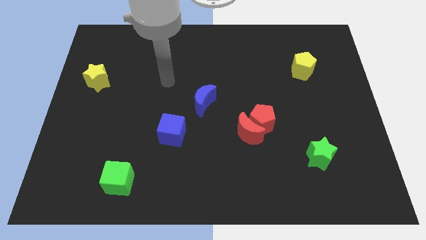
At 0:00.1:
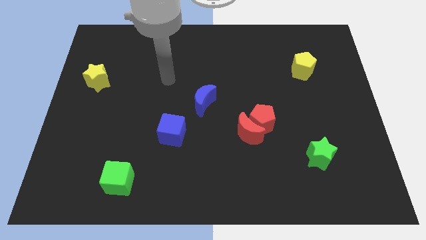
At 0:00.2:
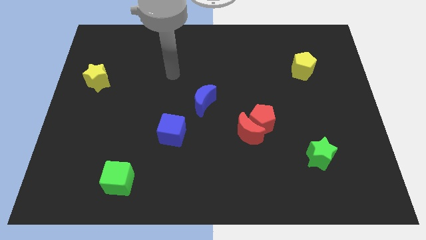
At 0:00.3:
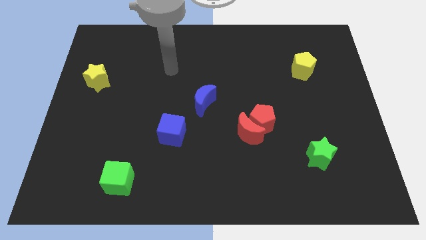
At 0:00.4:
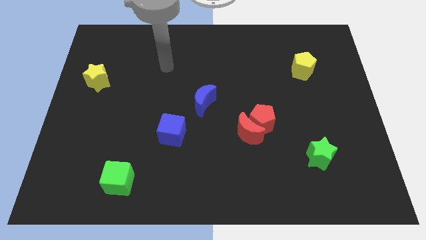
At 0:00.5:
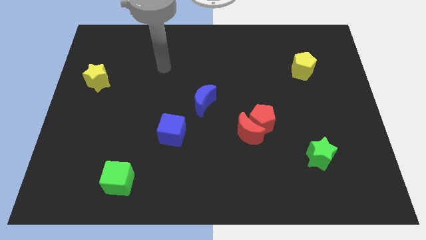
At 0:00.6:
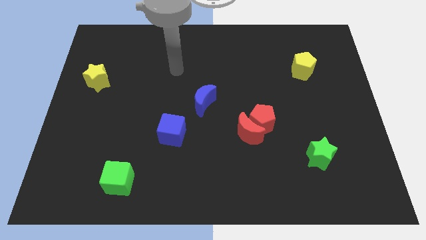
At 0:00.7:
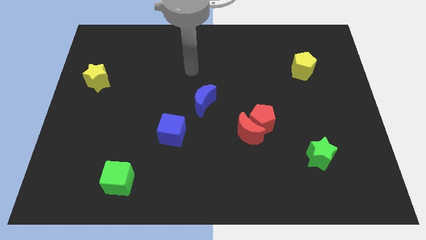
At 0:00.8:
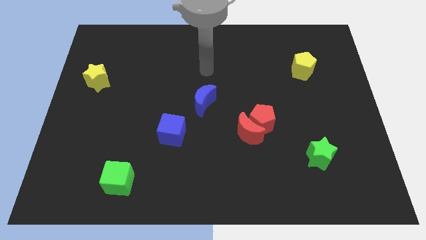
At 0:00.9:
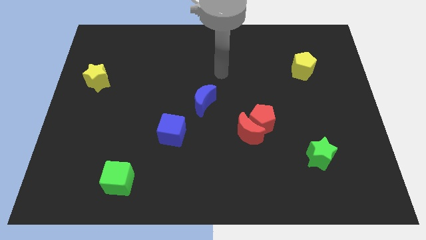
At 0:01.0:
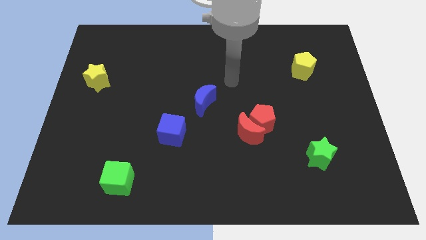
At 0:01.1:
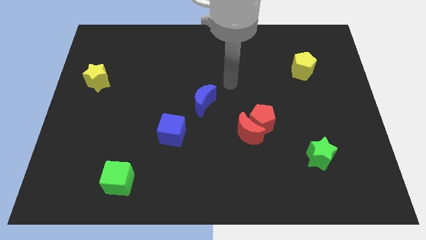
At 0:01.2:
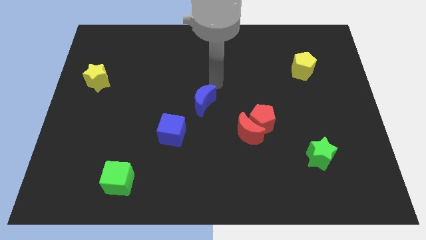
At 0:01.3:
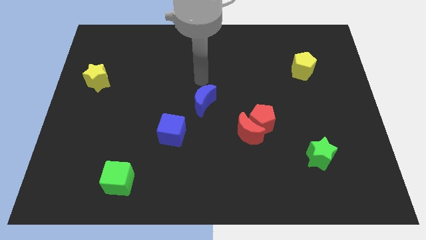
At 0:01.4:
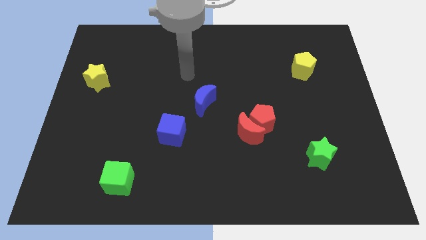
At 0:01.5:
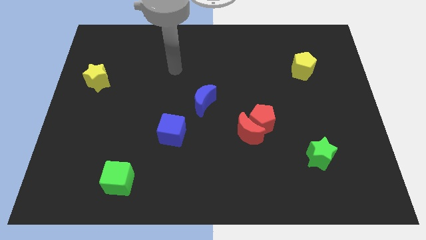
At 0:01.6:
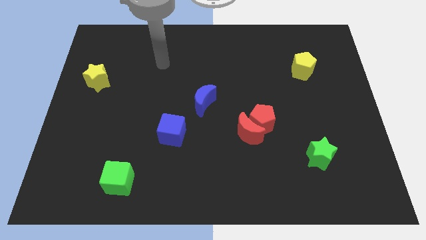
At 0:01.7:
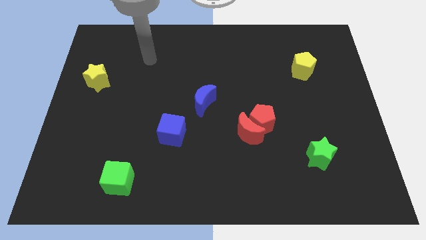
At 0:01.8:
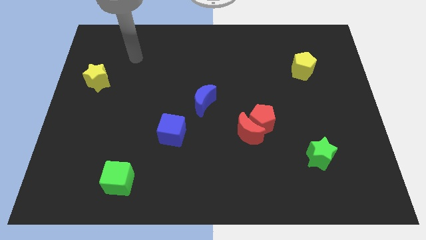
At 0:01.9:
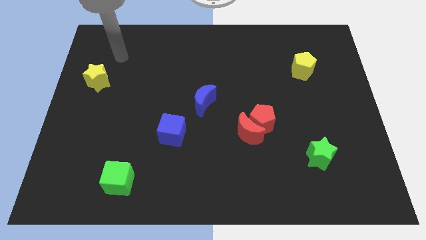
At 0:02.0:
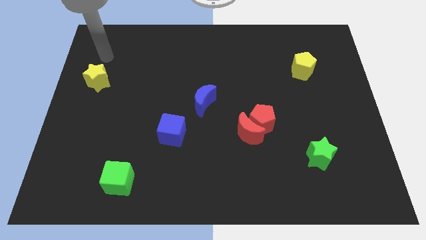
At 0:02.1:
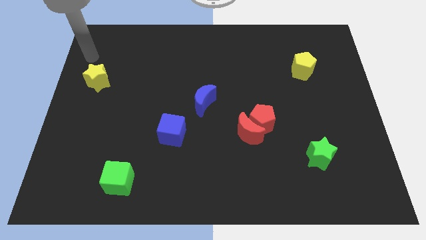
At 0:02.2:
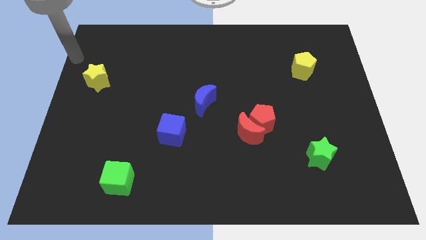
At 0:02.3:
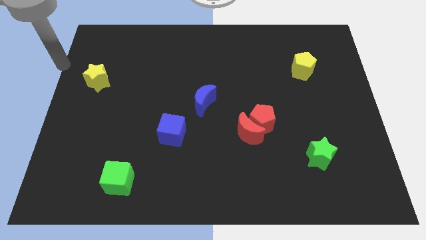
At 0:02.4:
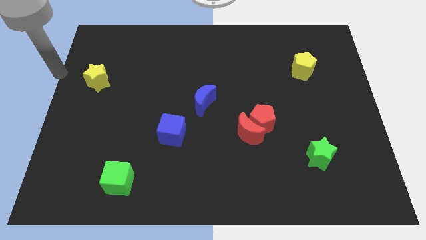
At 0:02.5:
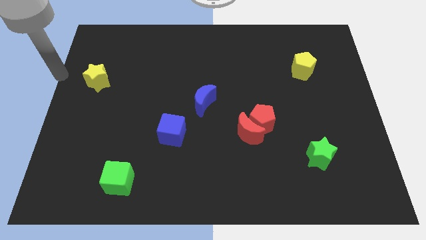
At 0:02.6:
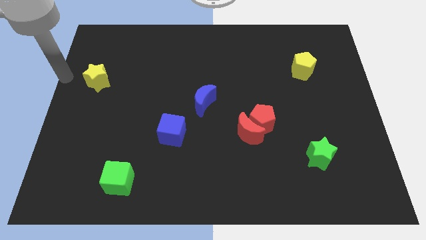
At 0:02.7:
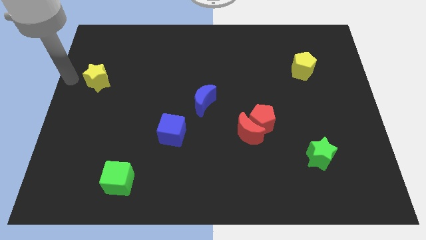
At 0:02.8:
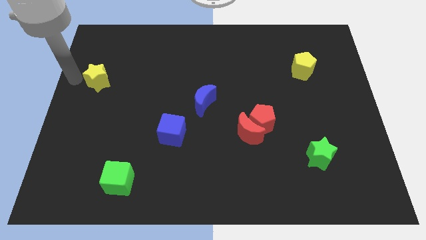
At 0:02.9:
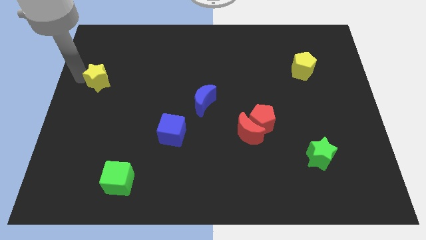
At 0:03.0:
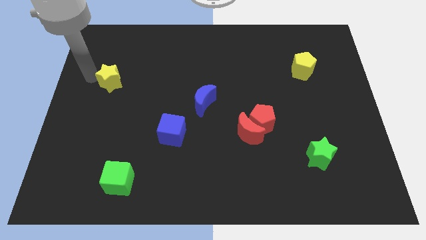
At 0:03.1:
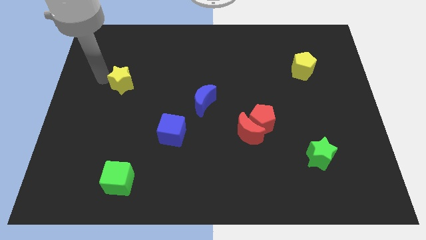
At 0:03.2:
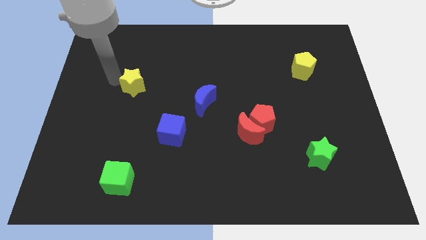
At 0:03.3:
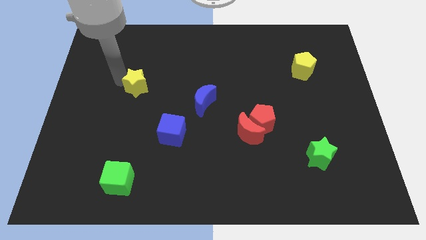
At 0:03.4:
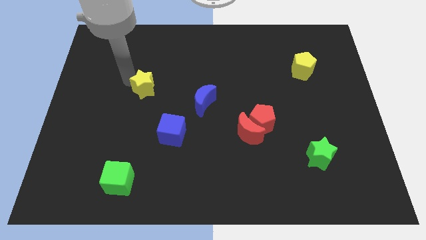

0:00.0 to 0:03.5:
move the yellow star slightly towards the right side

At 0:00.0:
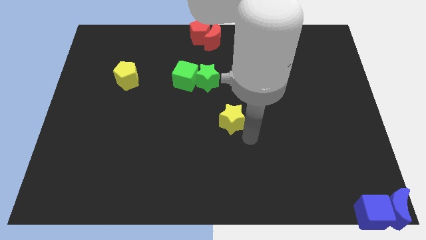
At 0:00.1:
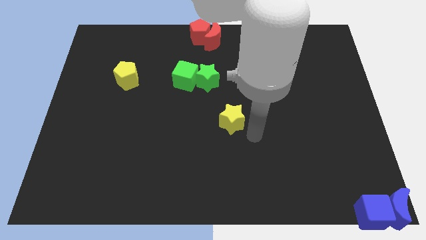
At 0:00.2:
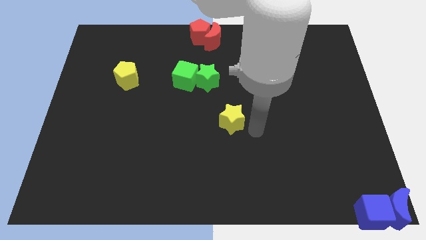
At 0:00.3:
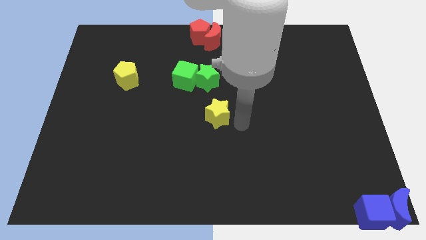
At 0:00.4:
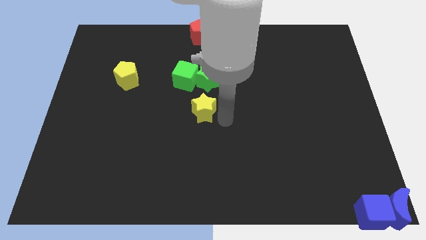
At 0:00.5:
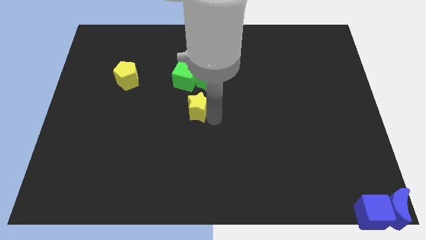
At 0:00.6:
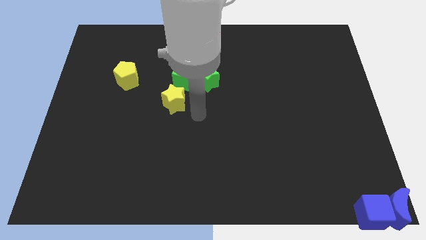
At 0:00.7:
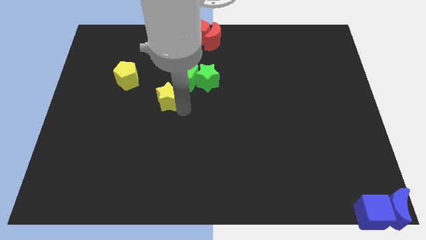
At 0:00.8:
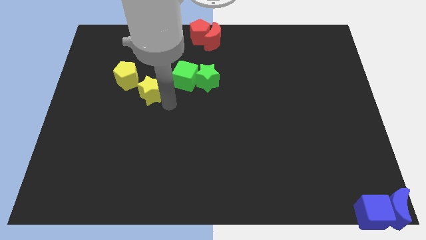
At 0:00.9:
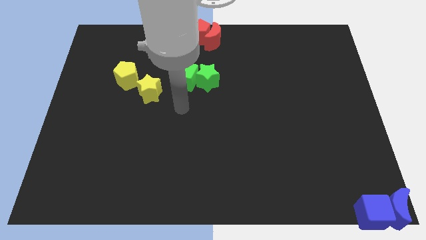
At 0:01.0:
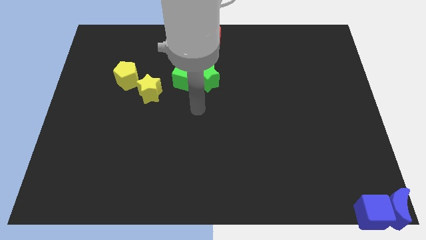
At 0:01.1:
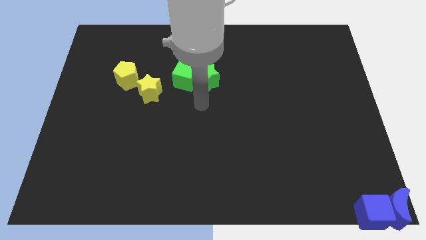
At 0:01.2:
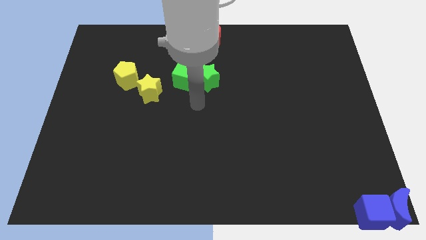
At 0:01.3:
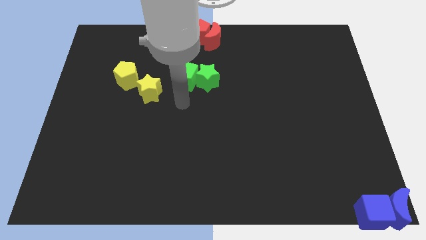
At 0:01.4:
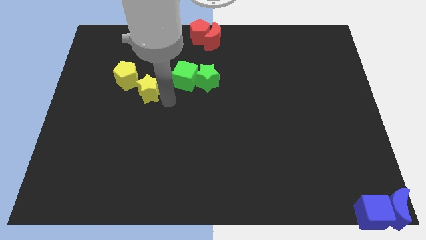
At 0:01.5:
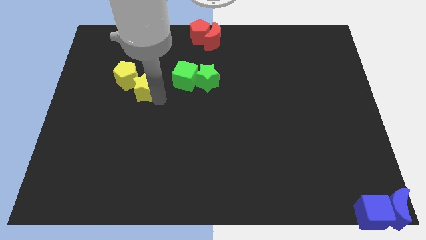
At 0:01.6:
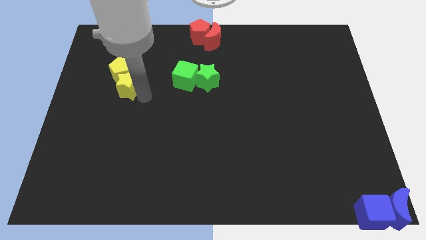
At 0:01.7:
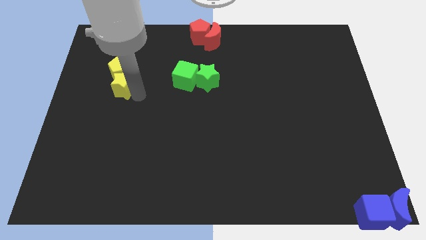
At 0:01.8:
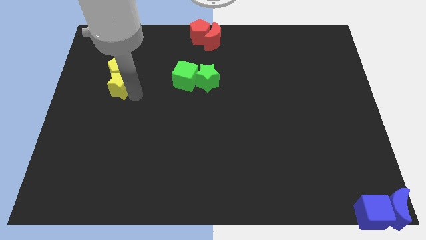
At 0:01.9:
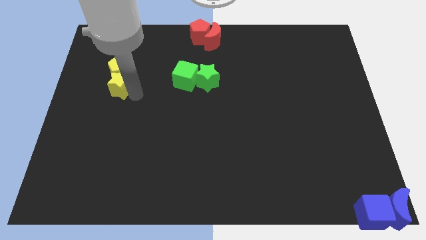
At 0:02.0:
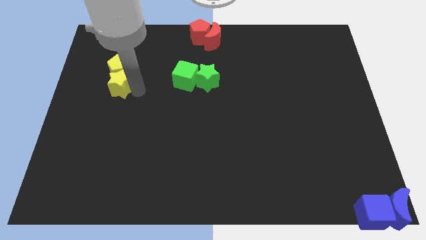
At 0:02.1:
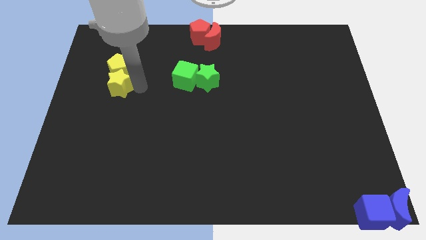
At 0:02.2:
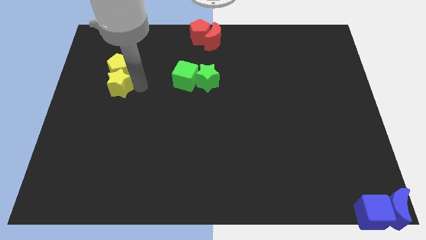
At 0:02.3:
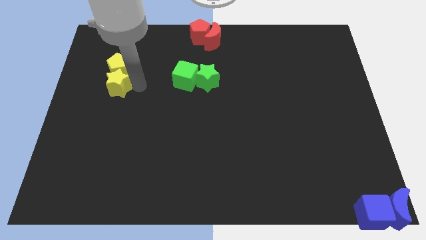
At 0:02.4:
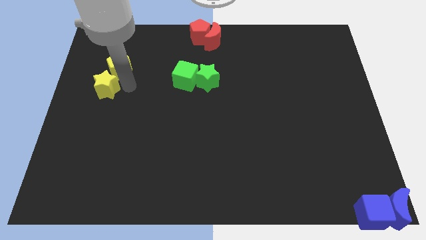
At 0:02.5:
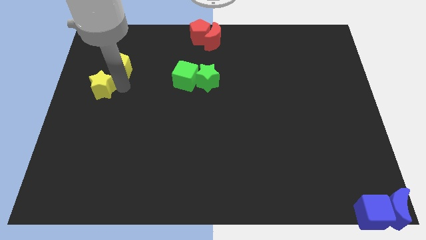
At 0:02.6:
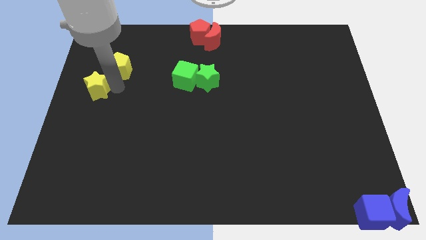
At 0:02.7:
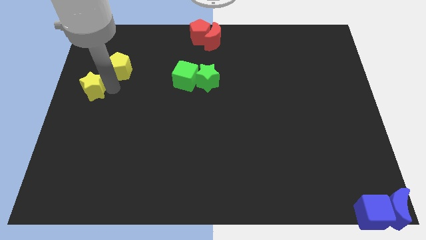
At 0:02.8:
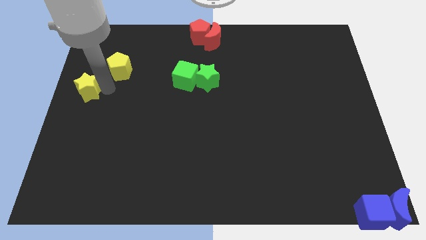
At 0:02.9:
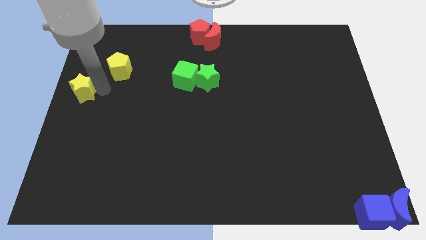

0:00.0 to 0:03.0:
place yellow star below to the yellow pentagon

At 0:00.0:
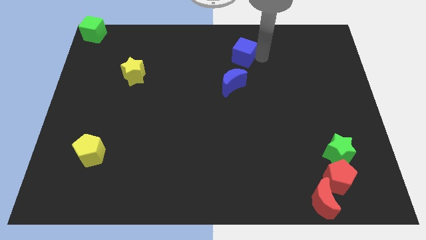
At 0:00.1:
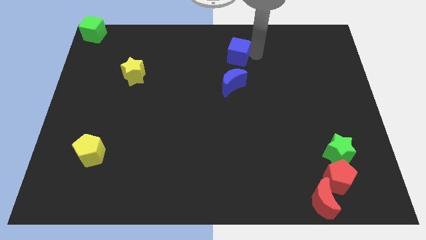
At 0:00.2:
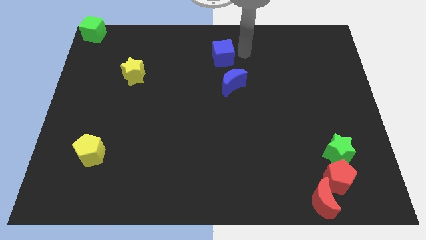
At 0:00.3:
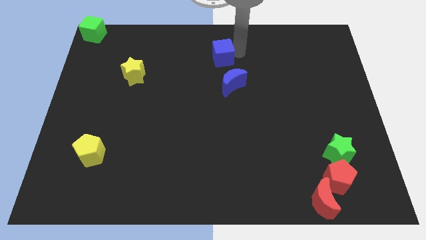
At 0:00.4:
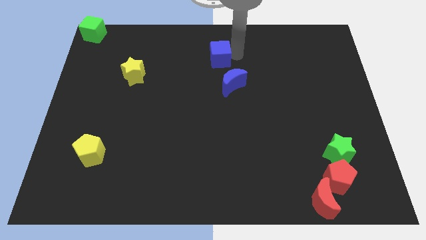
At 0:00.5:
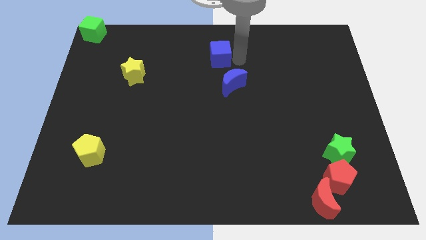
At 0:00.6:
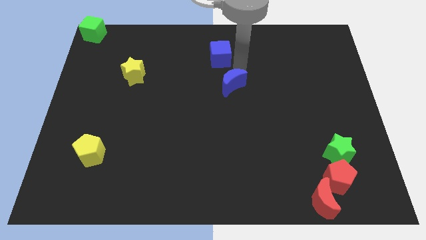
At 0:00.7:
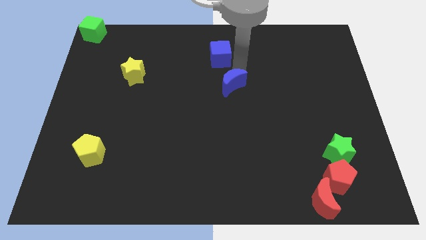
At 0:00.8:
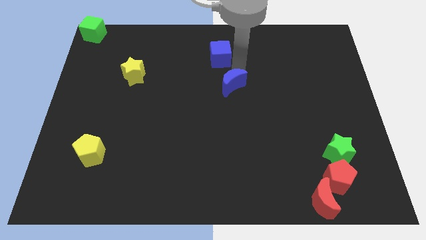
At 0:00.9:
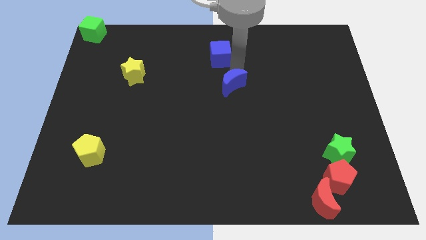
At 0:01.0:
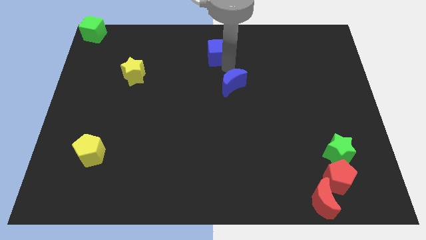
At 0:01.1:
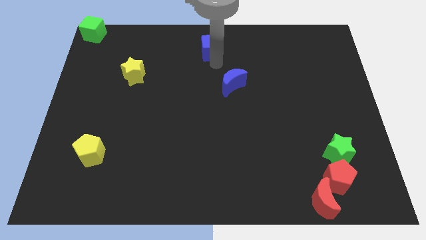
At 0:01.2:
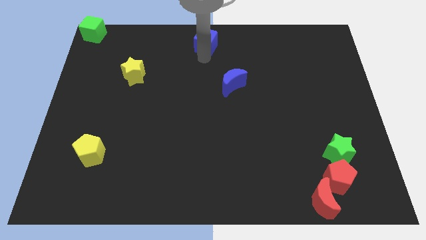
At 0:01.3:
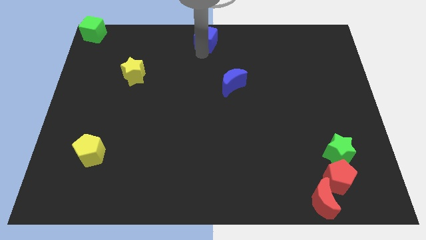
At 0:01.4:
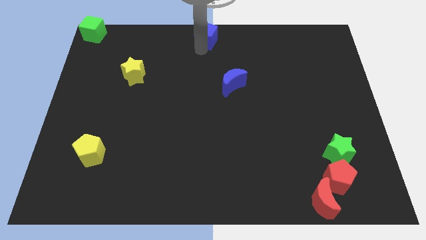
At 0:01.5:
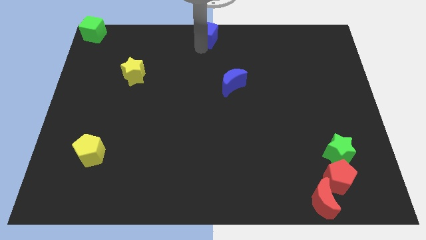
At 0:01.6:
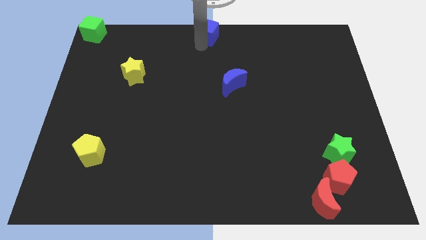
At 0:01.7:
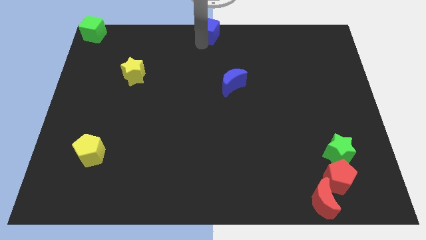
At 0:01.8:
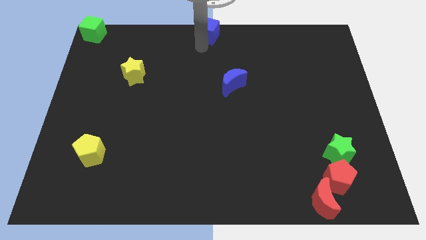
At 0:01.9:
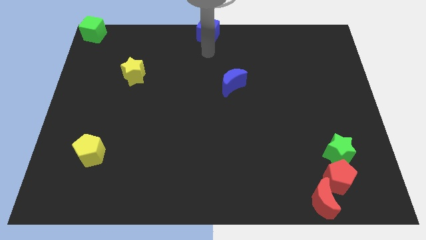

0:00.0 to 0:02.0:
push the blue cube to the top center of the table

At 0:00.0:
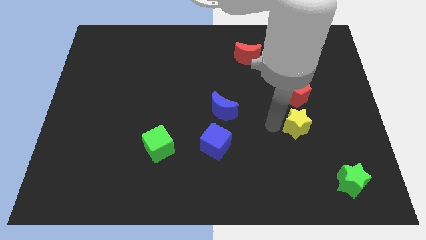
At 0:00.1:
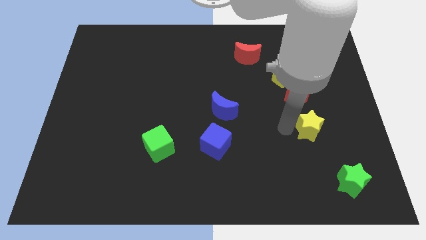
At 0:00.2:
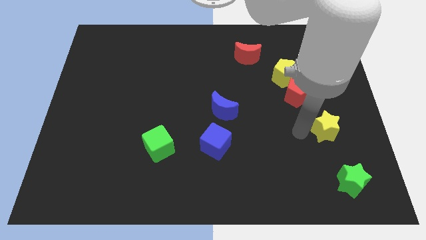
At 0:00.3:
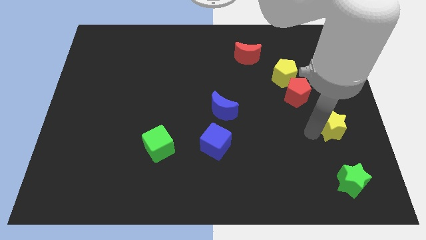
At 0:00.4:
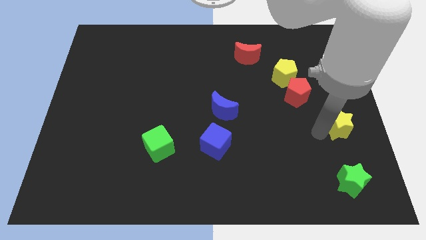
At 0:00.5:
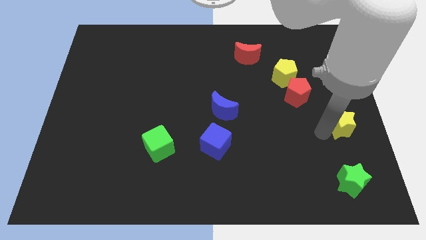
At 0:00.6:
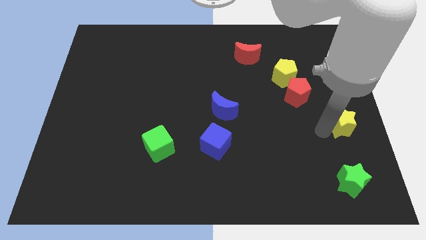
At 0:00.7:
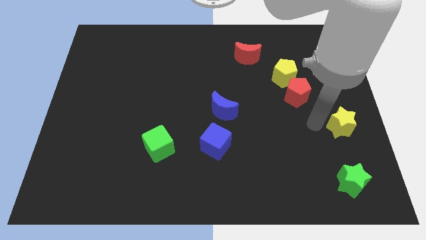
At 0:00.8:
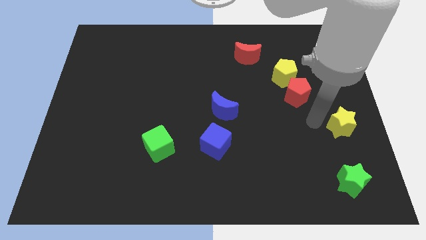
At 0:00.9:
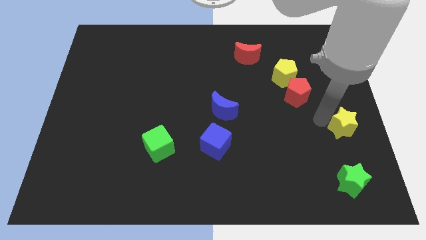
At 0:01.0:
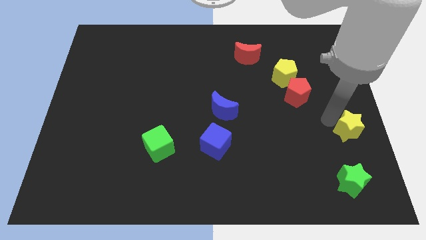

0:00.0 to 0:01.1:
place the yellow star above the green star
